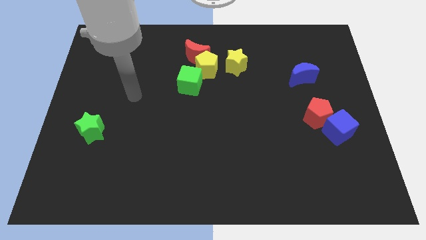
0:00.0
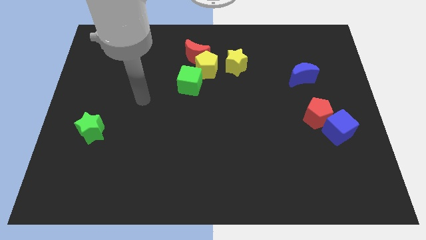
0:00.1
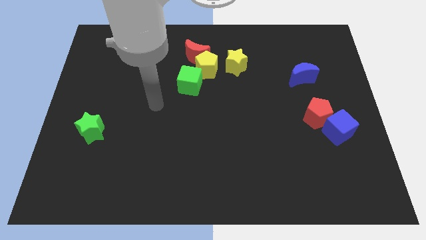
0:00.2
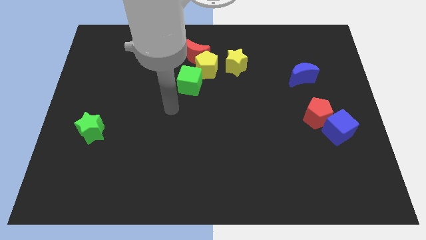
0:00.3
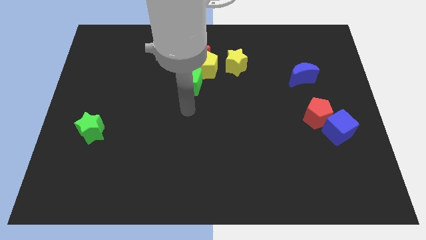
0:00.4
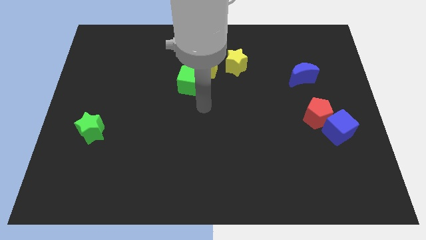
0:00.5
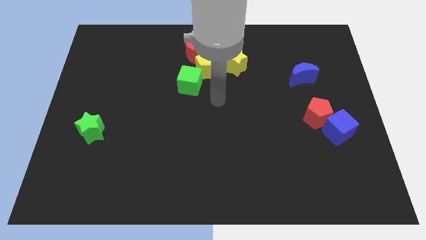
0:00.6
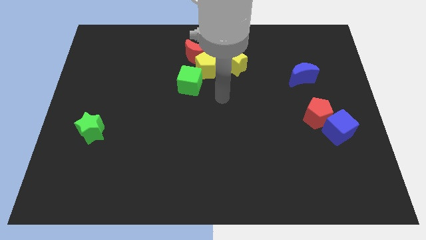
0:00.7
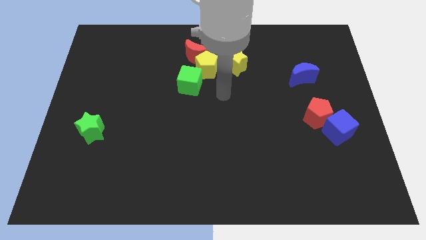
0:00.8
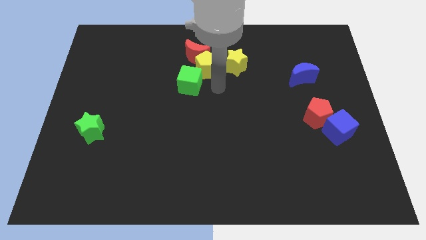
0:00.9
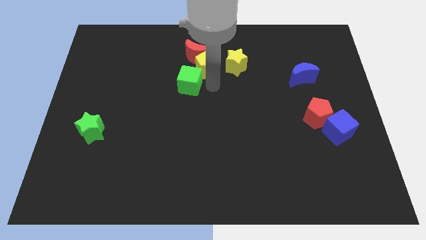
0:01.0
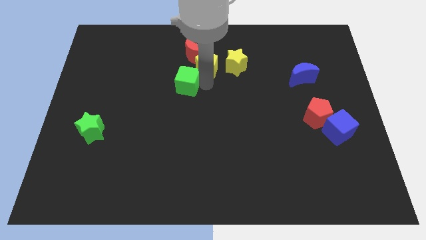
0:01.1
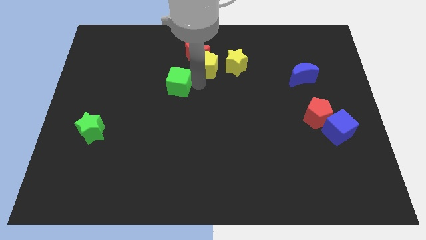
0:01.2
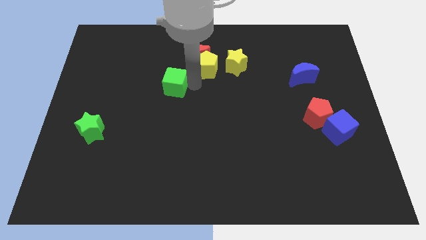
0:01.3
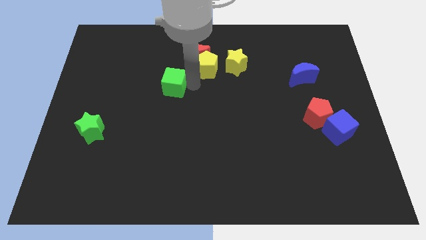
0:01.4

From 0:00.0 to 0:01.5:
move your arm close to the green cube

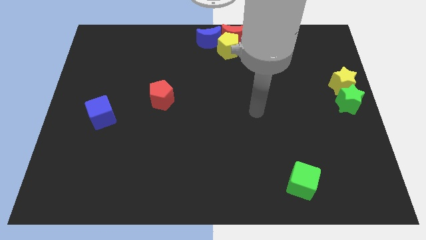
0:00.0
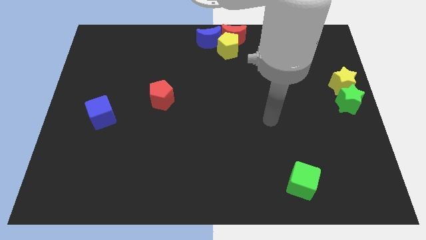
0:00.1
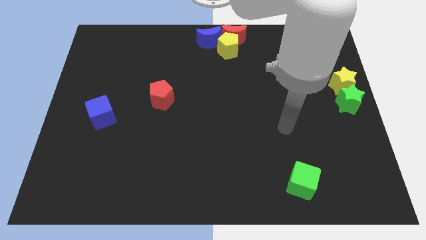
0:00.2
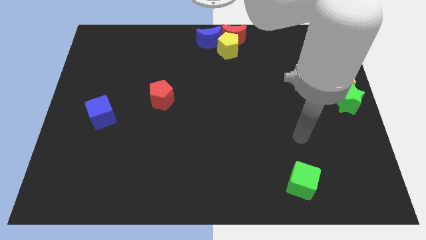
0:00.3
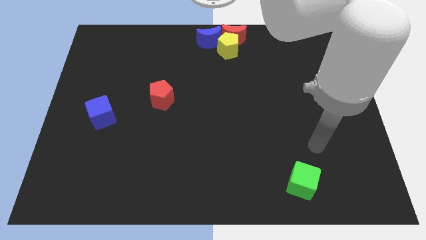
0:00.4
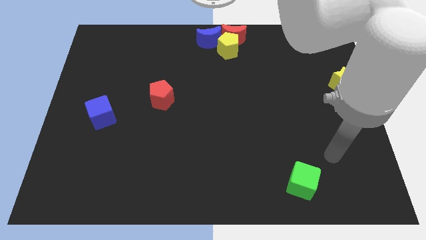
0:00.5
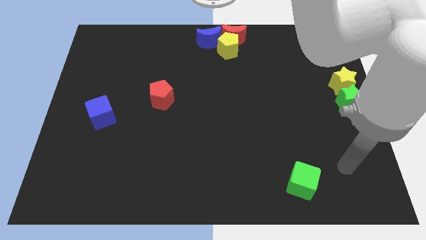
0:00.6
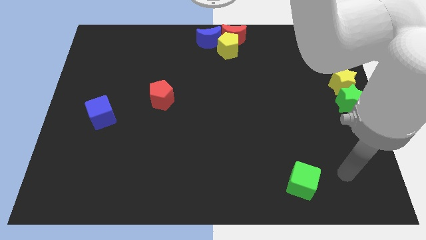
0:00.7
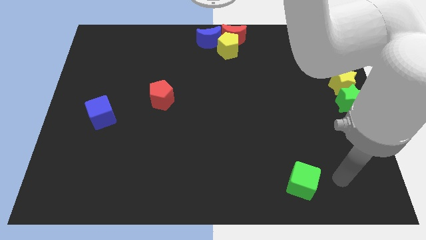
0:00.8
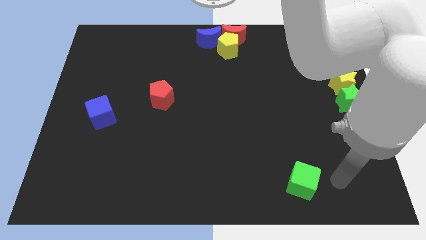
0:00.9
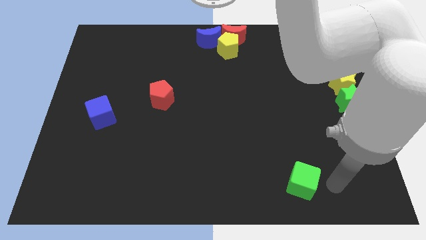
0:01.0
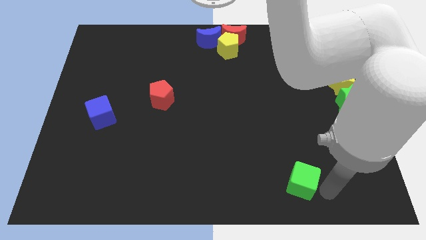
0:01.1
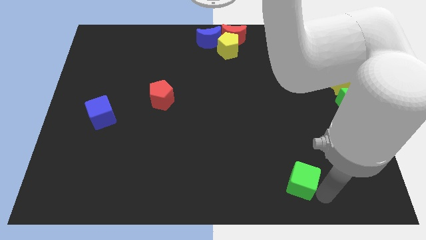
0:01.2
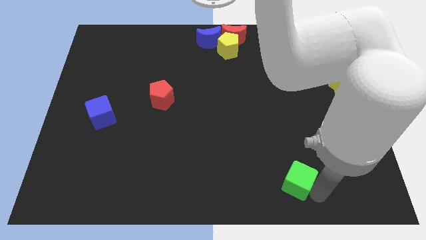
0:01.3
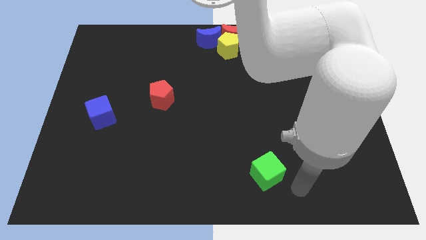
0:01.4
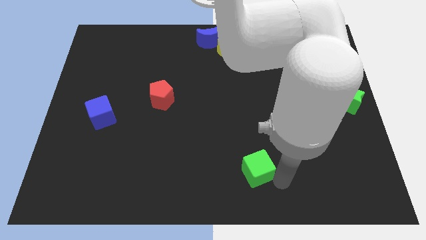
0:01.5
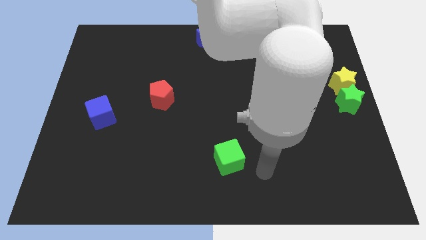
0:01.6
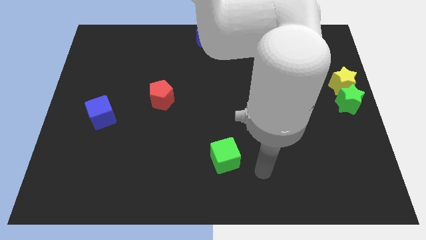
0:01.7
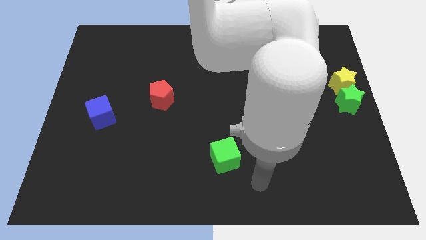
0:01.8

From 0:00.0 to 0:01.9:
slide the green cube towards the red pentagon

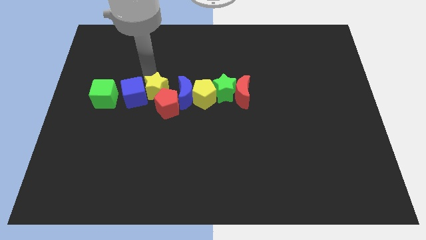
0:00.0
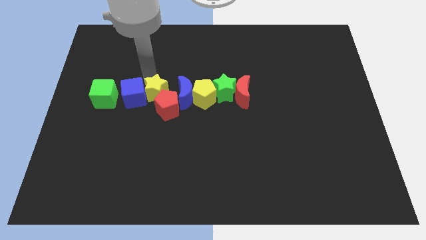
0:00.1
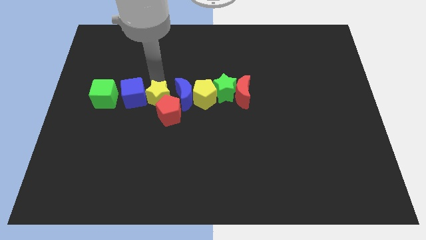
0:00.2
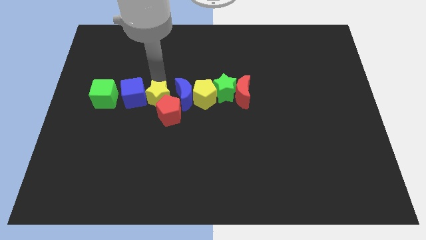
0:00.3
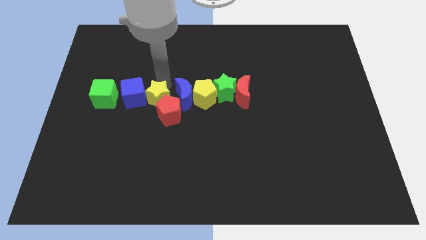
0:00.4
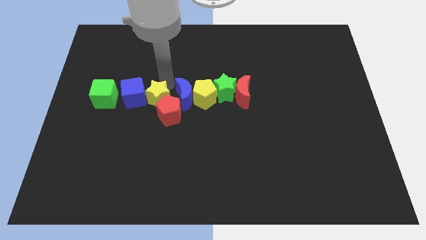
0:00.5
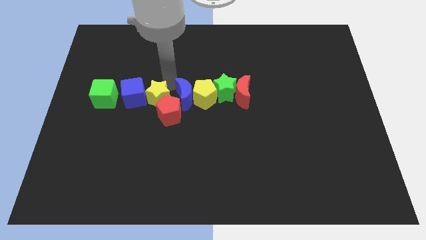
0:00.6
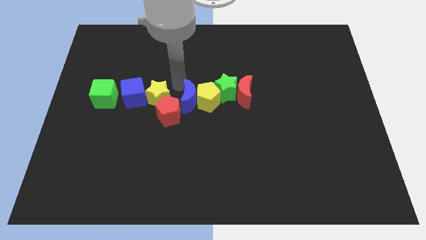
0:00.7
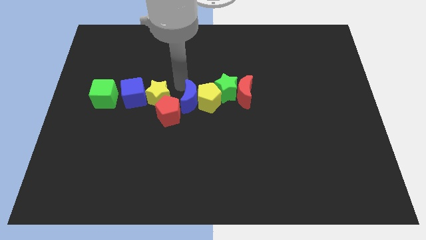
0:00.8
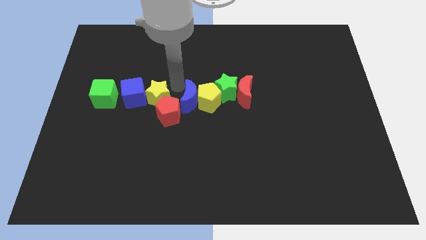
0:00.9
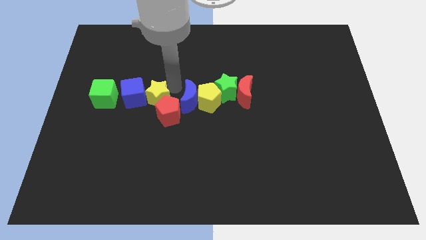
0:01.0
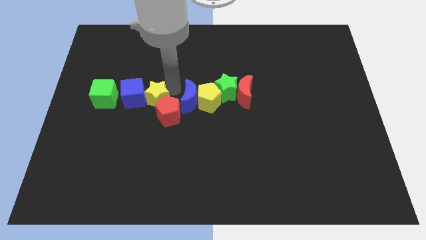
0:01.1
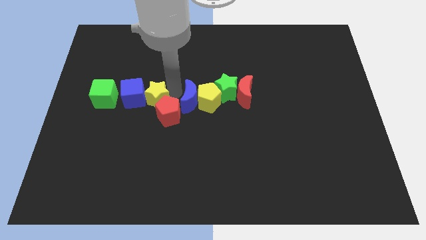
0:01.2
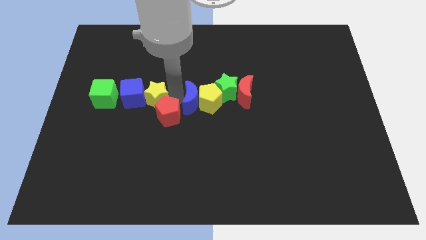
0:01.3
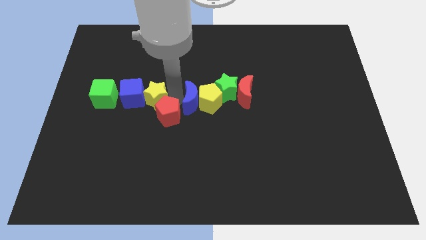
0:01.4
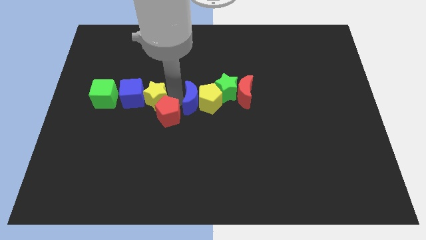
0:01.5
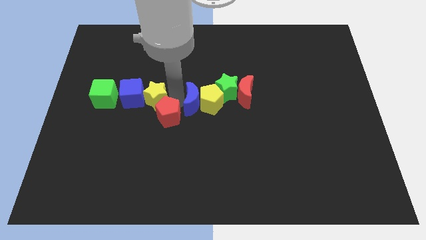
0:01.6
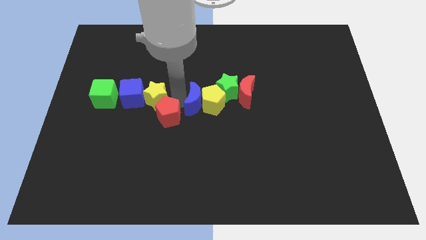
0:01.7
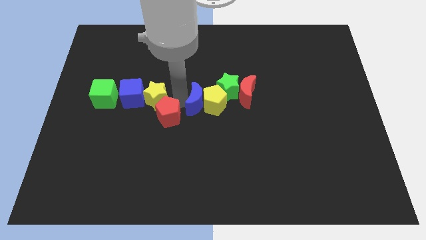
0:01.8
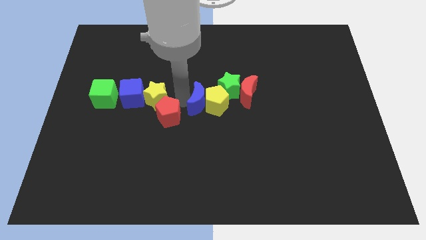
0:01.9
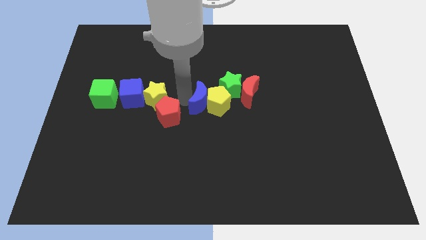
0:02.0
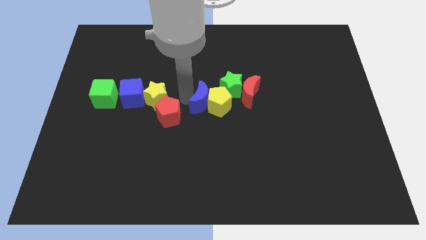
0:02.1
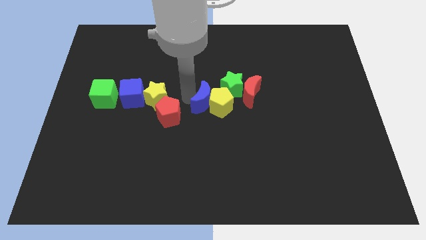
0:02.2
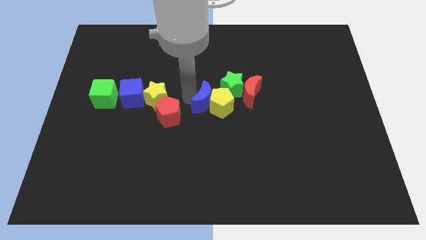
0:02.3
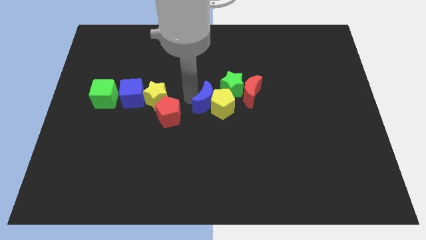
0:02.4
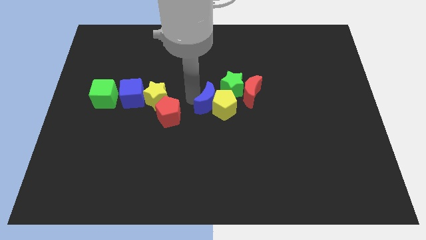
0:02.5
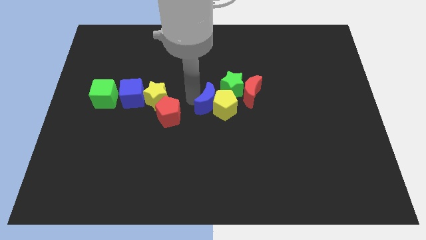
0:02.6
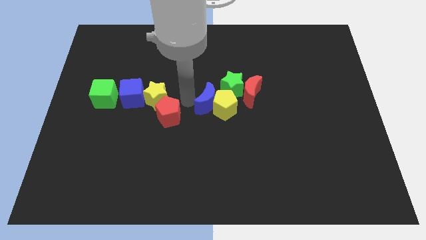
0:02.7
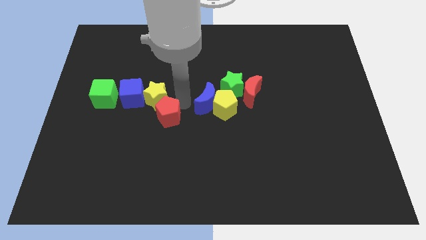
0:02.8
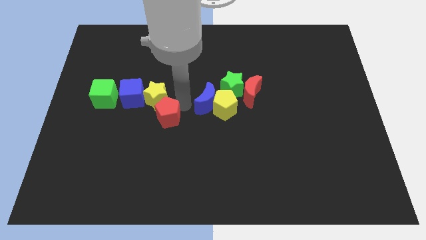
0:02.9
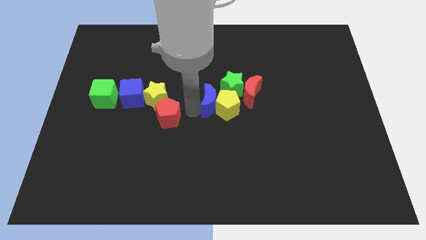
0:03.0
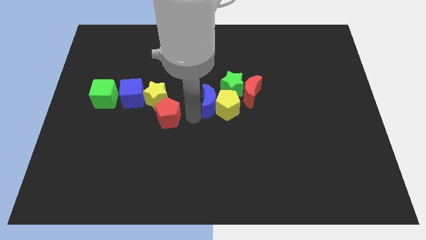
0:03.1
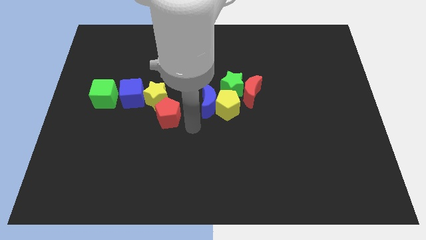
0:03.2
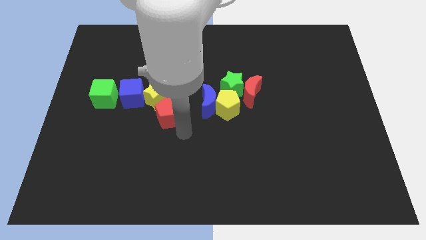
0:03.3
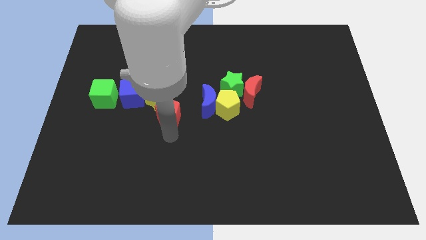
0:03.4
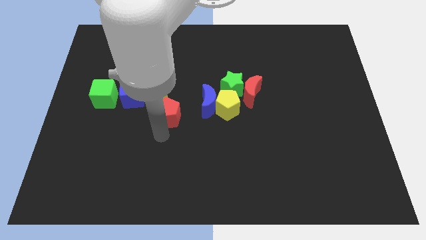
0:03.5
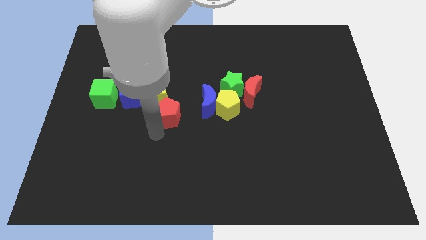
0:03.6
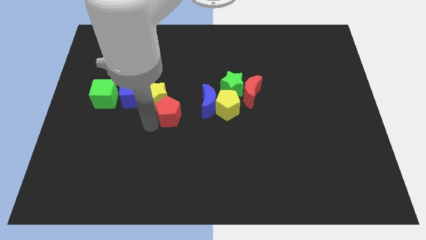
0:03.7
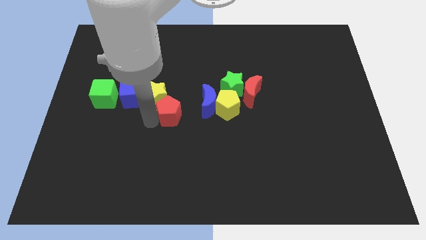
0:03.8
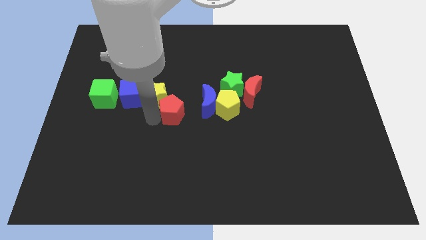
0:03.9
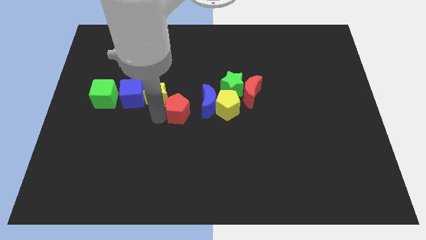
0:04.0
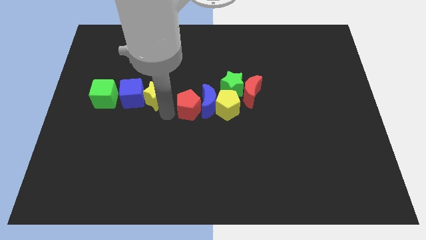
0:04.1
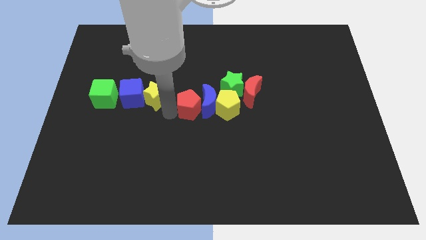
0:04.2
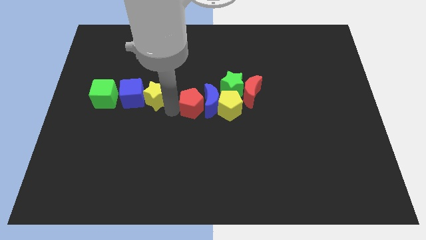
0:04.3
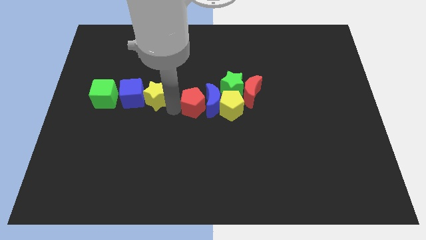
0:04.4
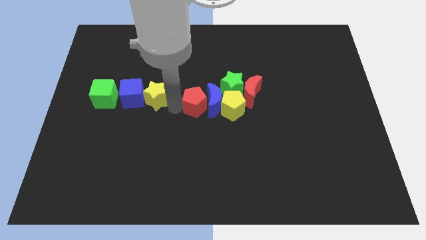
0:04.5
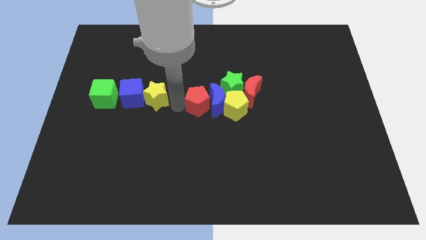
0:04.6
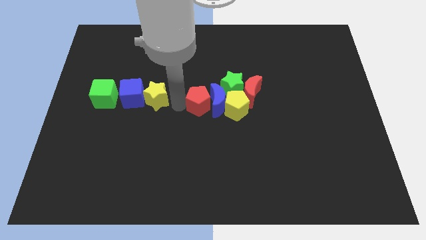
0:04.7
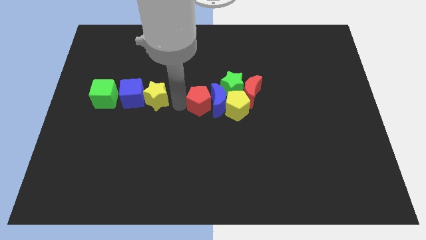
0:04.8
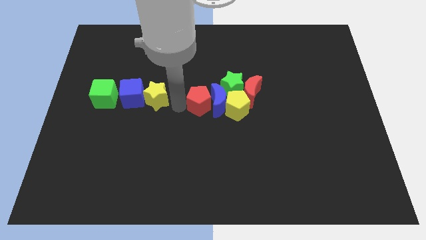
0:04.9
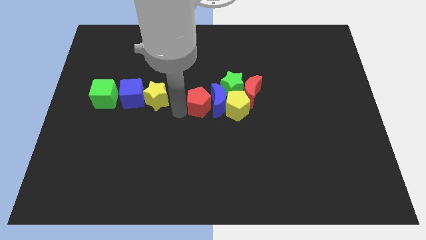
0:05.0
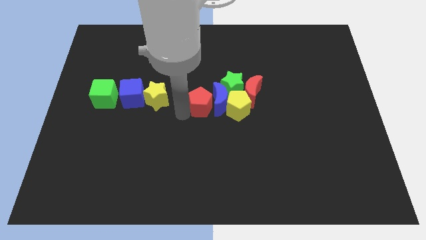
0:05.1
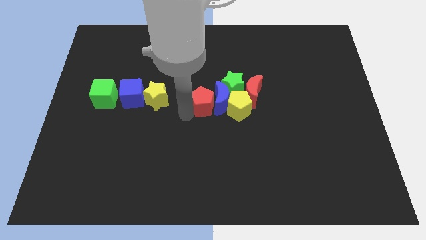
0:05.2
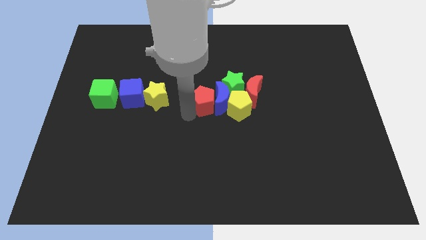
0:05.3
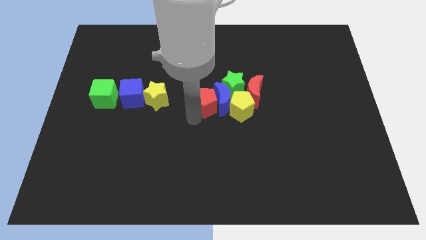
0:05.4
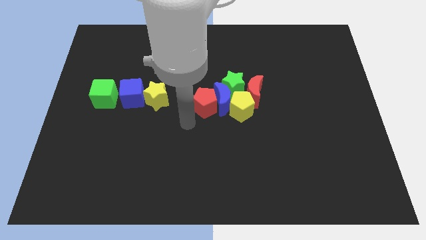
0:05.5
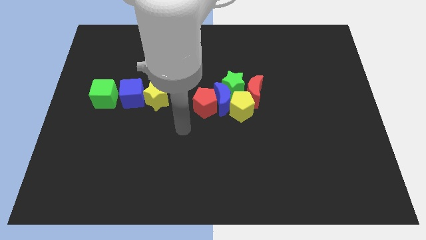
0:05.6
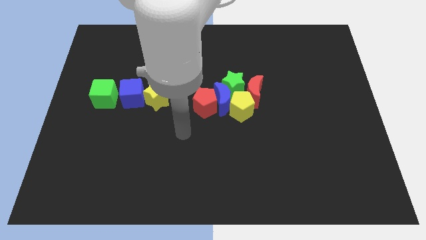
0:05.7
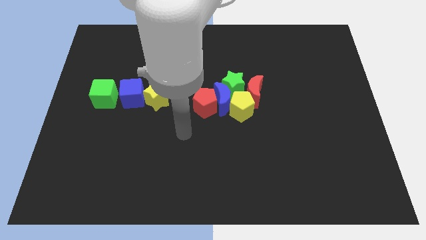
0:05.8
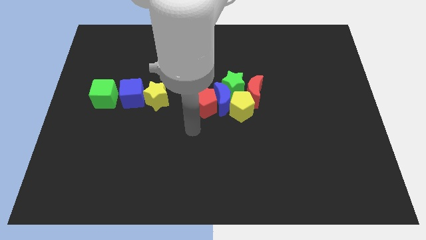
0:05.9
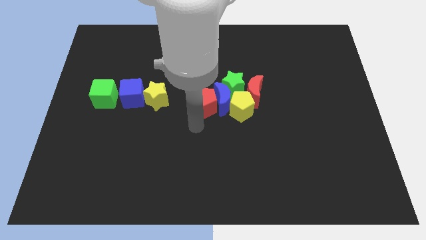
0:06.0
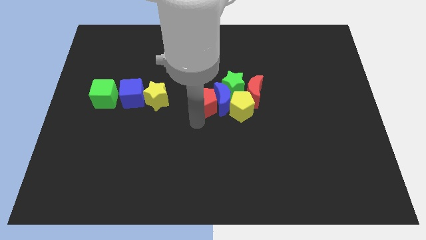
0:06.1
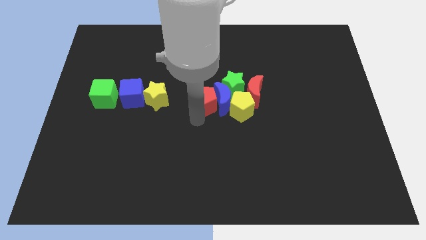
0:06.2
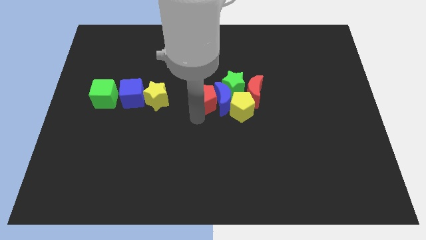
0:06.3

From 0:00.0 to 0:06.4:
separate red pentagon from the yellow star
